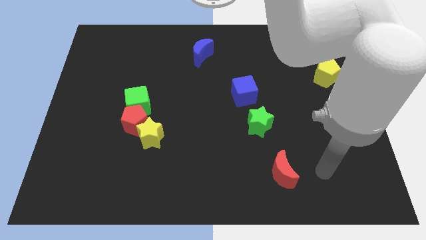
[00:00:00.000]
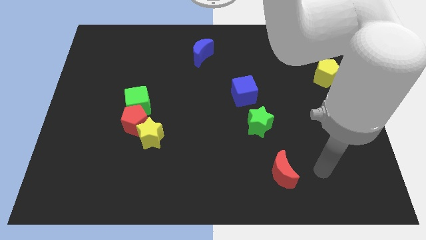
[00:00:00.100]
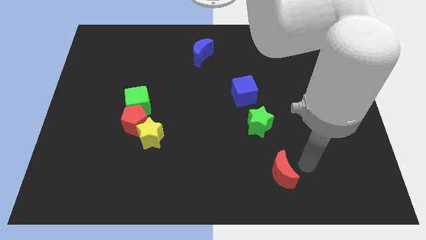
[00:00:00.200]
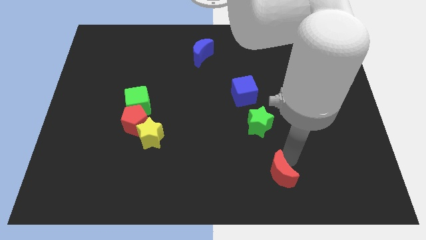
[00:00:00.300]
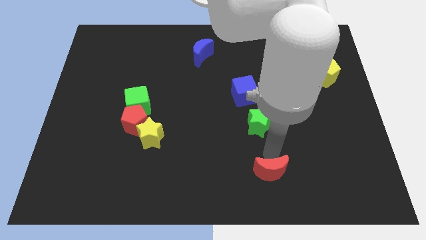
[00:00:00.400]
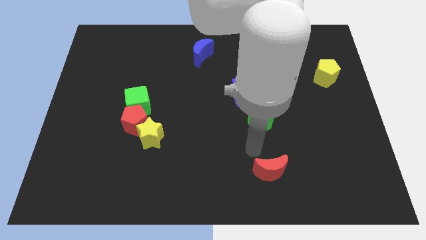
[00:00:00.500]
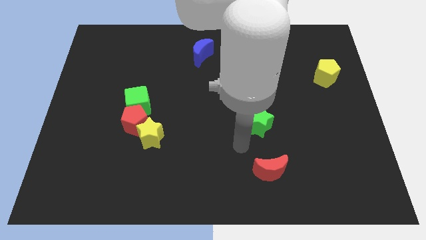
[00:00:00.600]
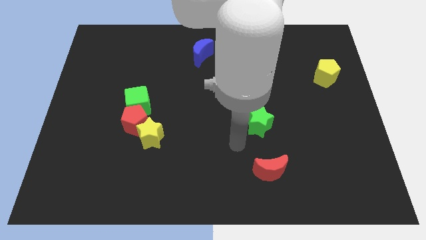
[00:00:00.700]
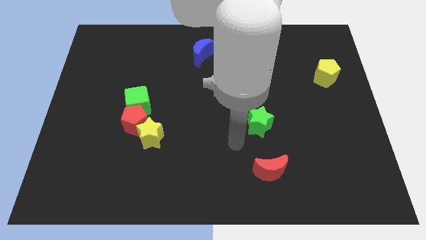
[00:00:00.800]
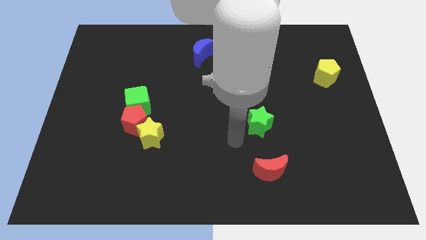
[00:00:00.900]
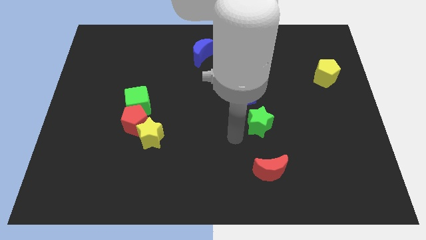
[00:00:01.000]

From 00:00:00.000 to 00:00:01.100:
place your arm near to the green star

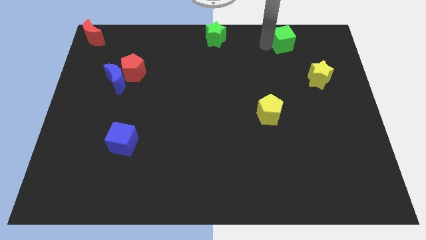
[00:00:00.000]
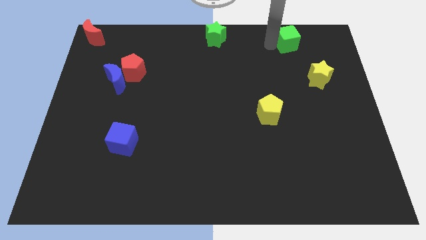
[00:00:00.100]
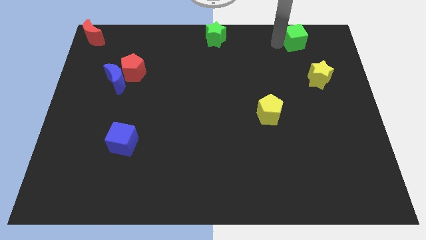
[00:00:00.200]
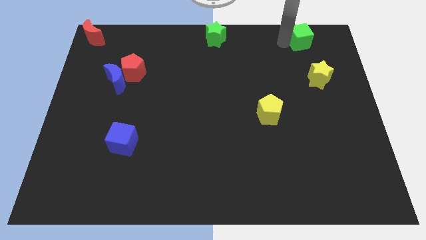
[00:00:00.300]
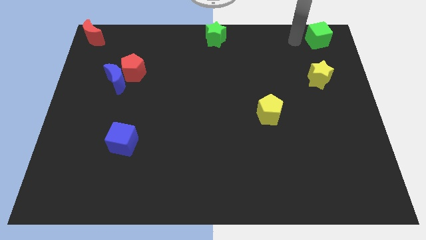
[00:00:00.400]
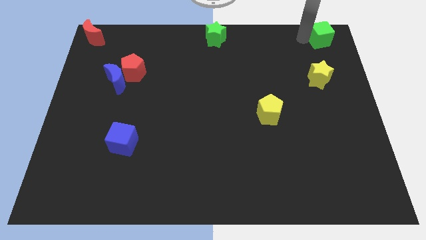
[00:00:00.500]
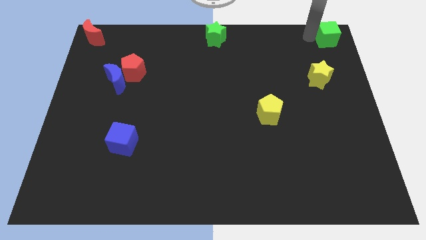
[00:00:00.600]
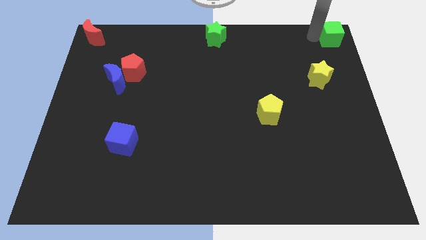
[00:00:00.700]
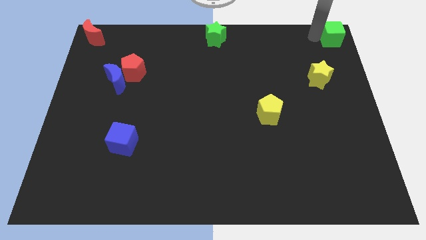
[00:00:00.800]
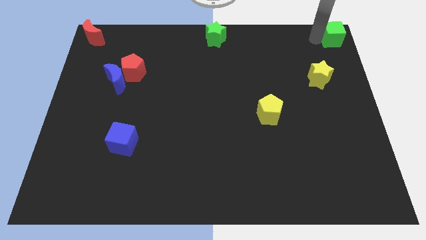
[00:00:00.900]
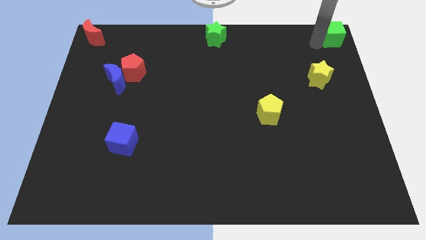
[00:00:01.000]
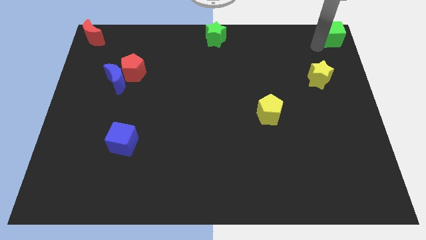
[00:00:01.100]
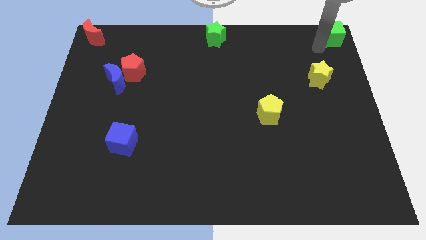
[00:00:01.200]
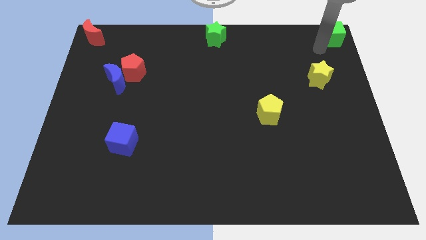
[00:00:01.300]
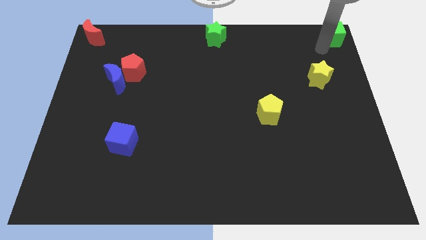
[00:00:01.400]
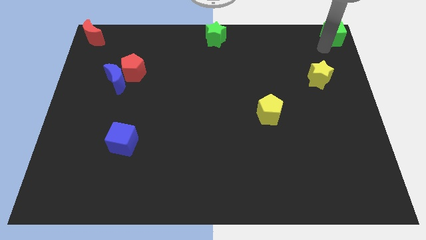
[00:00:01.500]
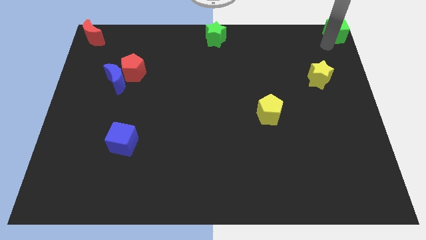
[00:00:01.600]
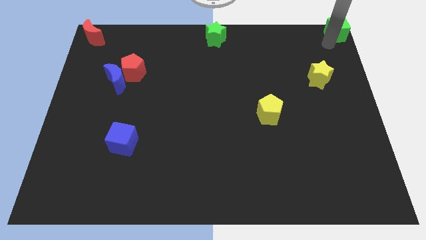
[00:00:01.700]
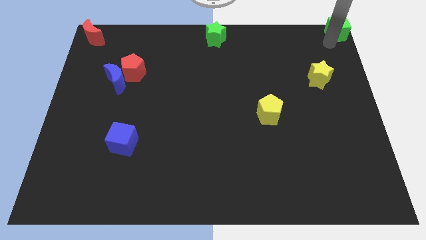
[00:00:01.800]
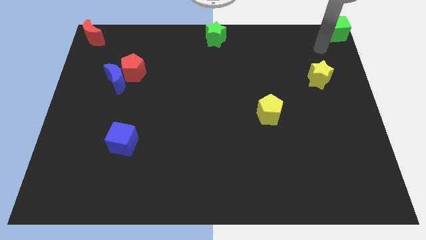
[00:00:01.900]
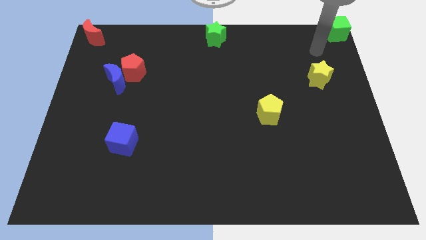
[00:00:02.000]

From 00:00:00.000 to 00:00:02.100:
move green cube in the top right corner

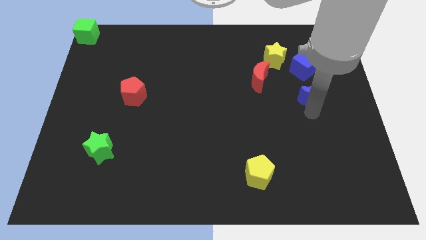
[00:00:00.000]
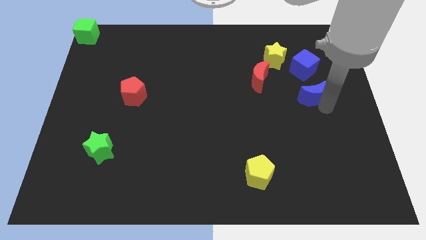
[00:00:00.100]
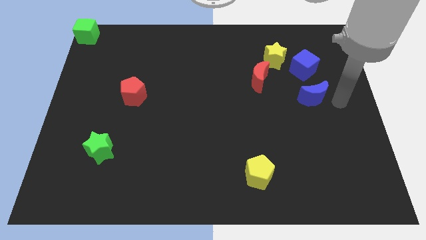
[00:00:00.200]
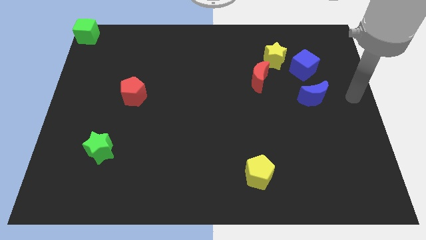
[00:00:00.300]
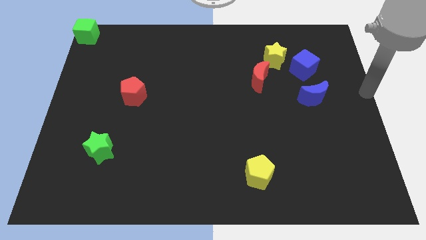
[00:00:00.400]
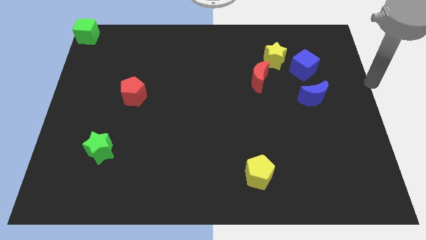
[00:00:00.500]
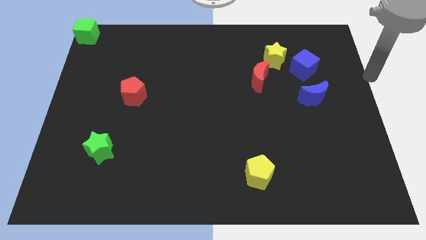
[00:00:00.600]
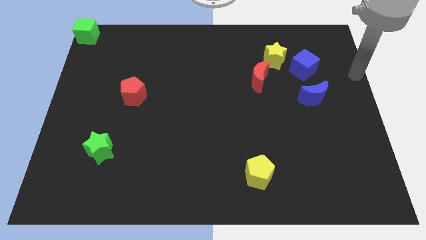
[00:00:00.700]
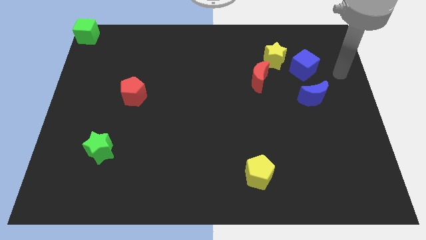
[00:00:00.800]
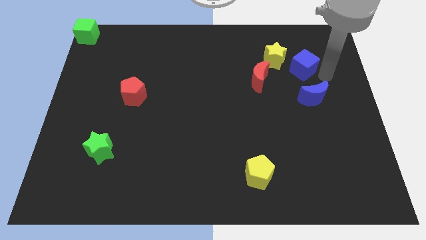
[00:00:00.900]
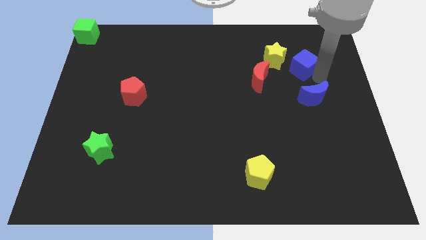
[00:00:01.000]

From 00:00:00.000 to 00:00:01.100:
slightly push the blue cube

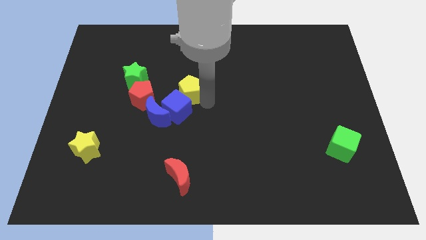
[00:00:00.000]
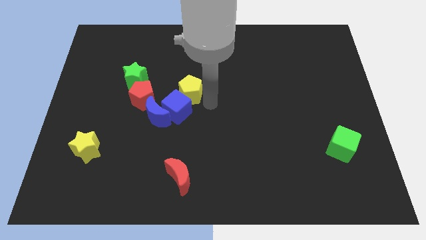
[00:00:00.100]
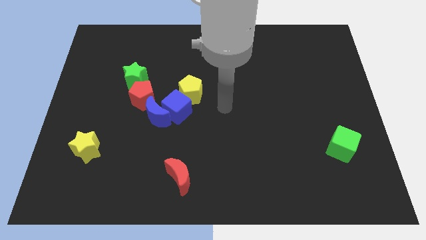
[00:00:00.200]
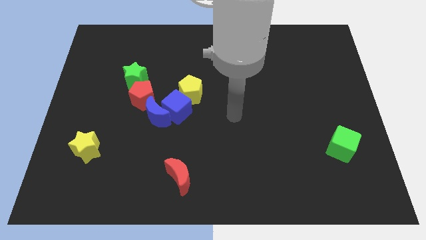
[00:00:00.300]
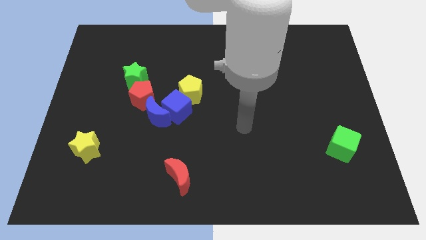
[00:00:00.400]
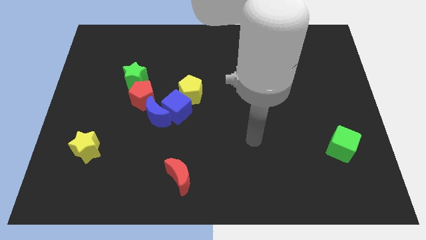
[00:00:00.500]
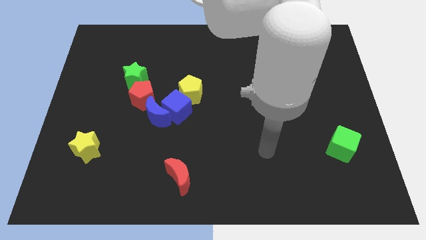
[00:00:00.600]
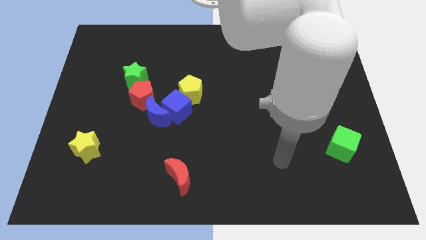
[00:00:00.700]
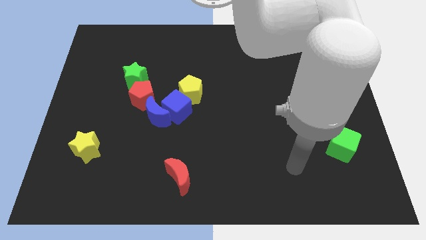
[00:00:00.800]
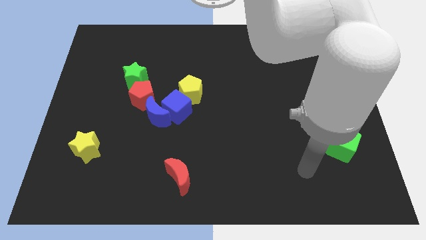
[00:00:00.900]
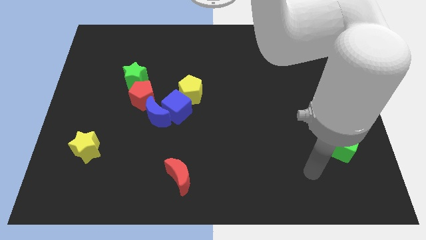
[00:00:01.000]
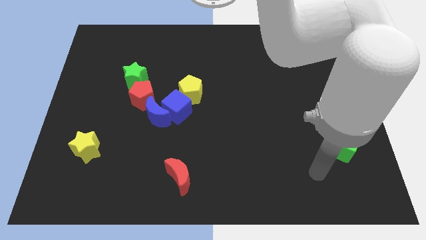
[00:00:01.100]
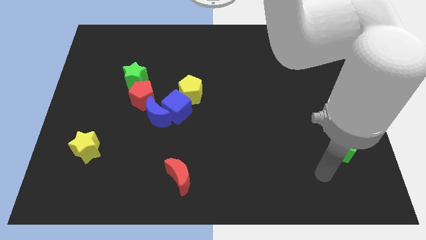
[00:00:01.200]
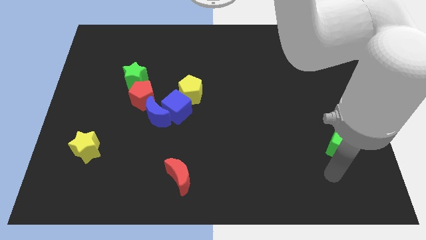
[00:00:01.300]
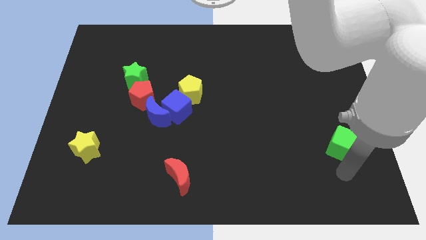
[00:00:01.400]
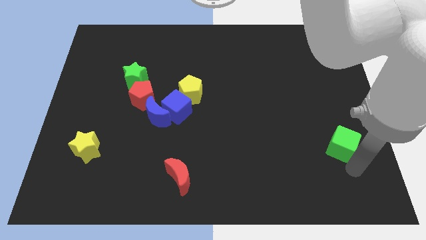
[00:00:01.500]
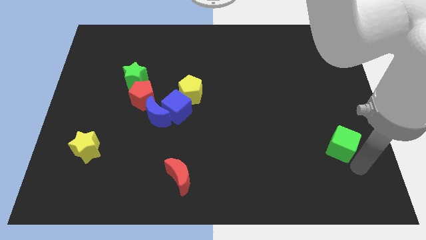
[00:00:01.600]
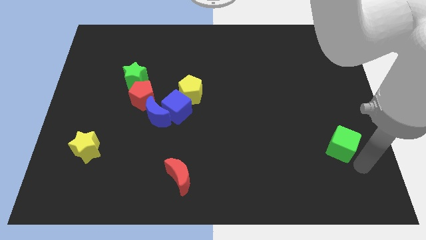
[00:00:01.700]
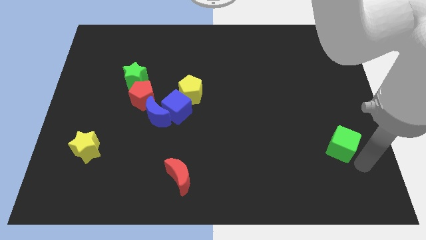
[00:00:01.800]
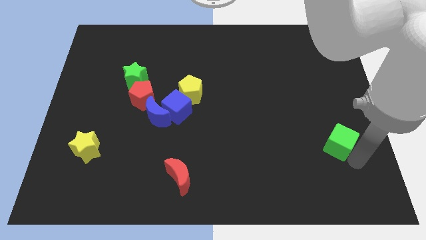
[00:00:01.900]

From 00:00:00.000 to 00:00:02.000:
point your arm towards green cube

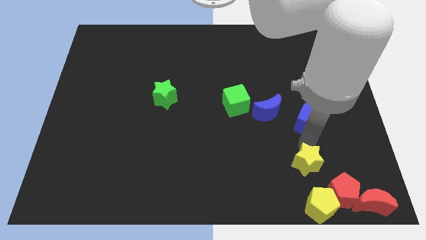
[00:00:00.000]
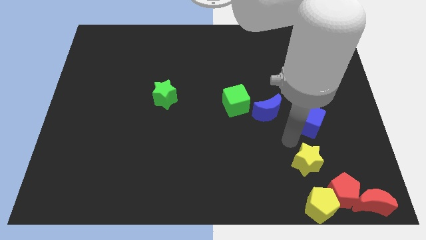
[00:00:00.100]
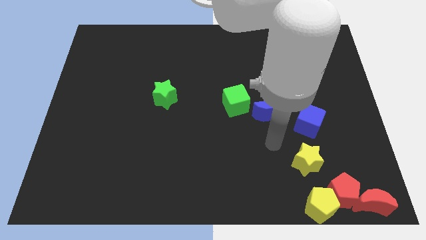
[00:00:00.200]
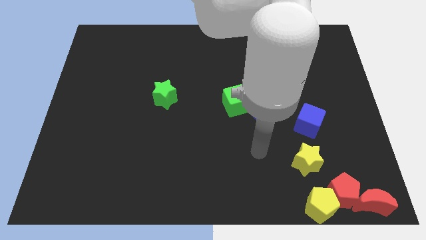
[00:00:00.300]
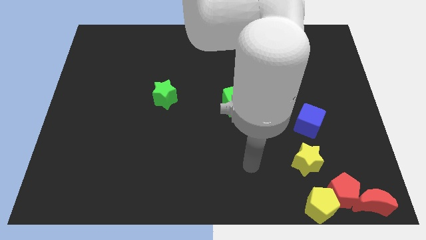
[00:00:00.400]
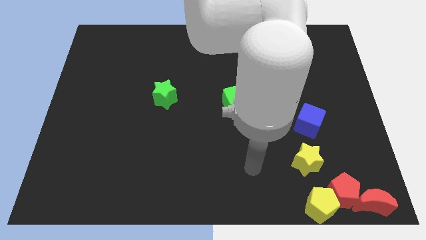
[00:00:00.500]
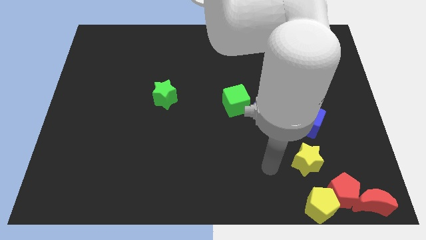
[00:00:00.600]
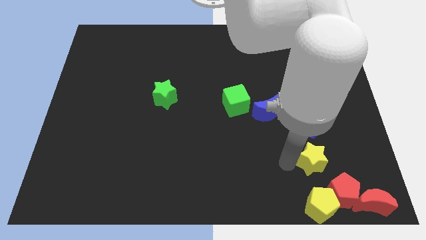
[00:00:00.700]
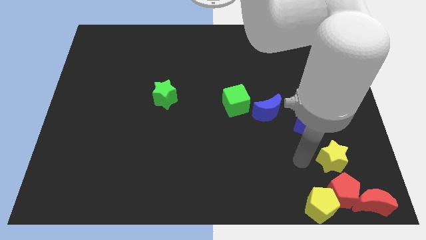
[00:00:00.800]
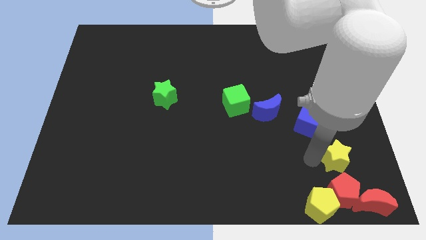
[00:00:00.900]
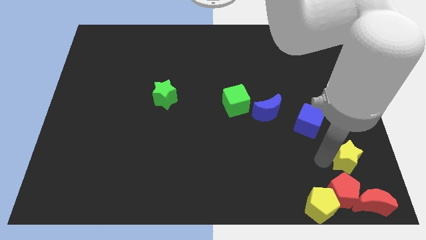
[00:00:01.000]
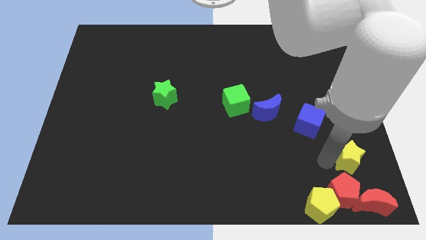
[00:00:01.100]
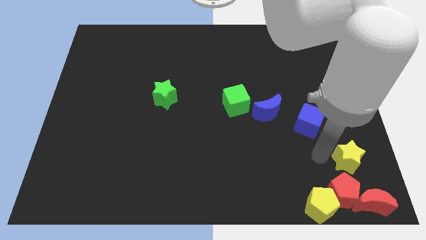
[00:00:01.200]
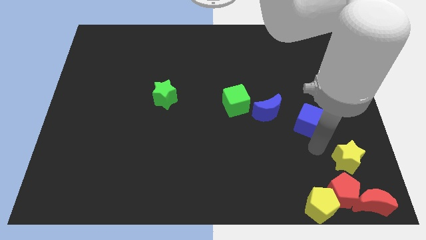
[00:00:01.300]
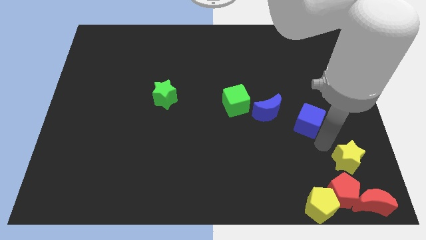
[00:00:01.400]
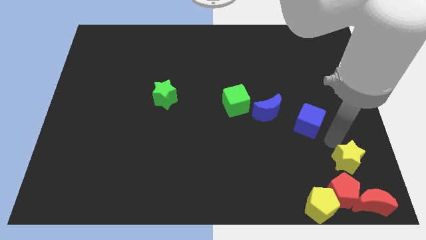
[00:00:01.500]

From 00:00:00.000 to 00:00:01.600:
put the yellow star above the red pentagon

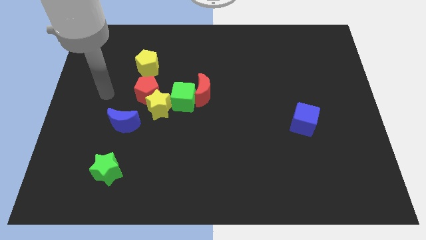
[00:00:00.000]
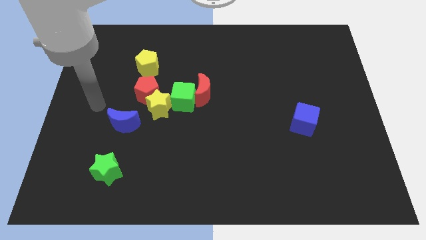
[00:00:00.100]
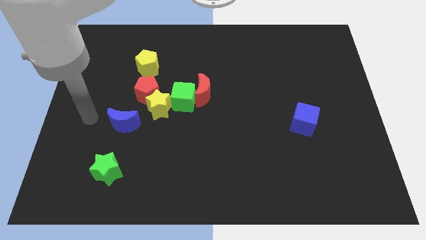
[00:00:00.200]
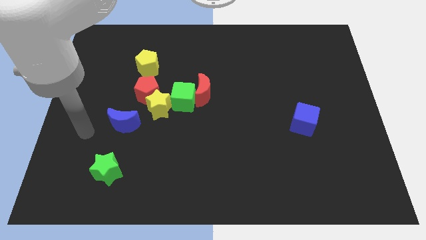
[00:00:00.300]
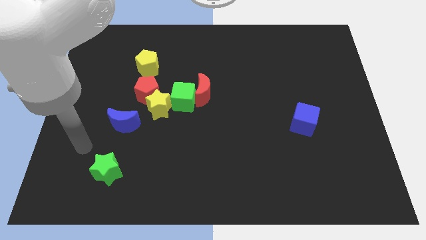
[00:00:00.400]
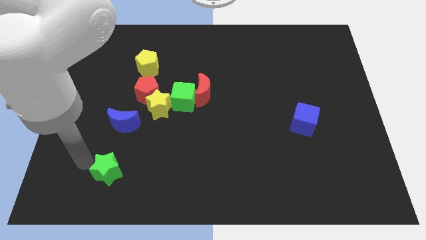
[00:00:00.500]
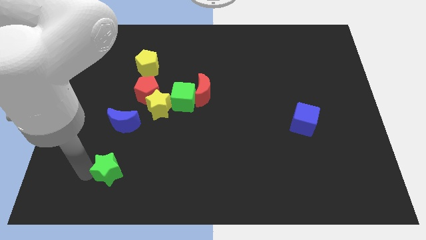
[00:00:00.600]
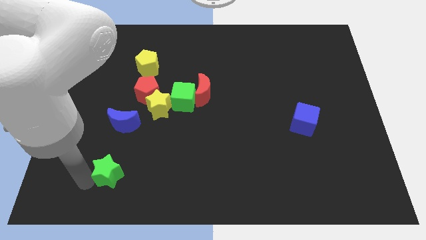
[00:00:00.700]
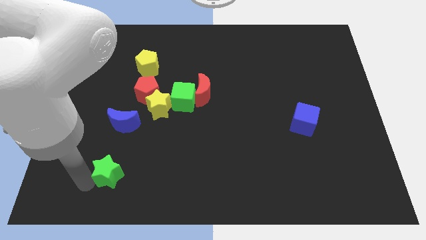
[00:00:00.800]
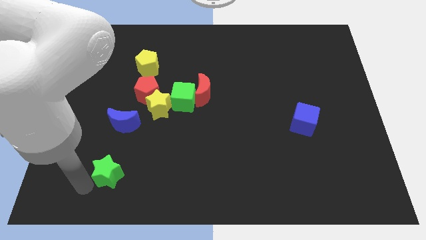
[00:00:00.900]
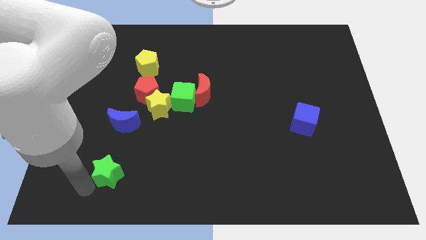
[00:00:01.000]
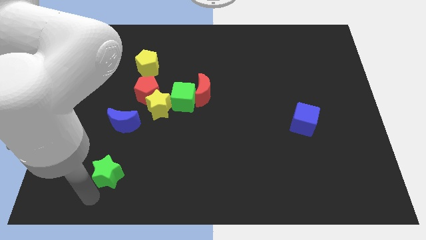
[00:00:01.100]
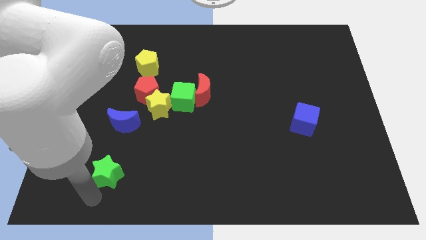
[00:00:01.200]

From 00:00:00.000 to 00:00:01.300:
touch the green star
